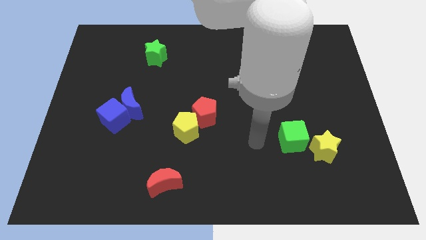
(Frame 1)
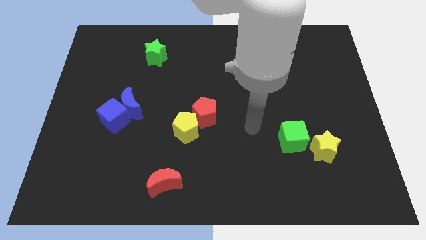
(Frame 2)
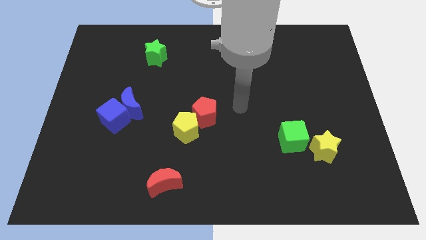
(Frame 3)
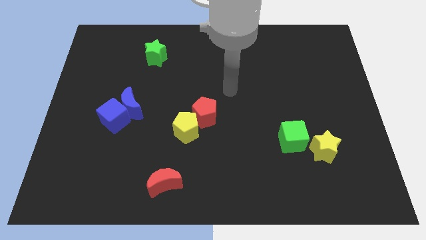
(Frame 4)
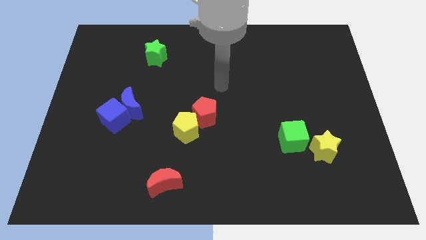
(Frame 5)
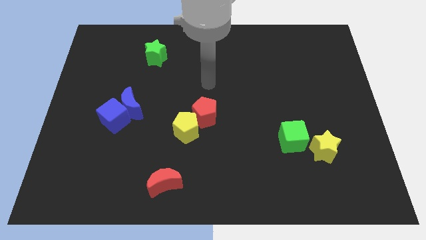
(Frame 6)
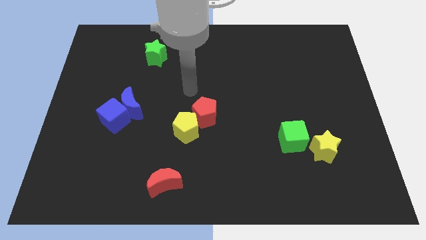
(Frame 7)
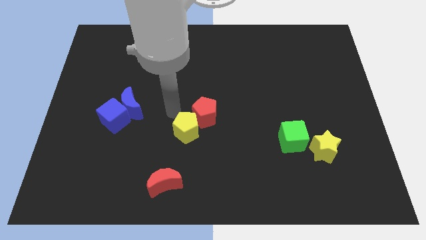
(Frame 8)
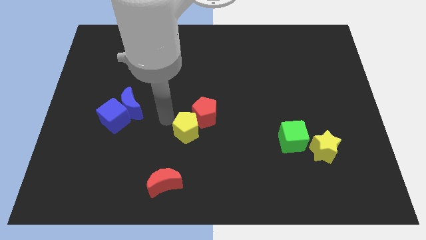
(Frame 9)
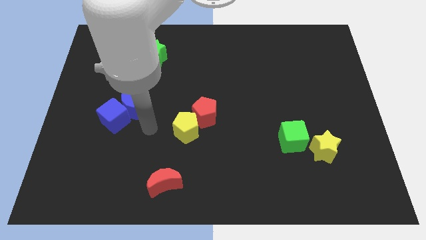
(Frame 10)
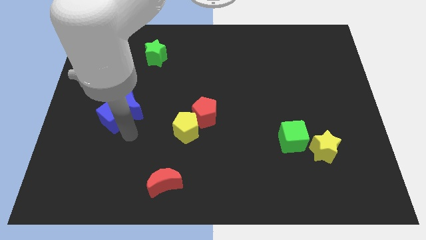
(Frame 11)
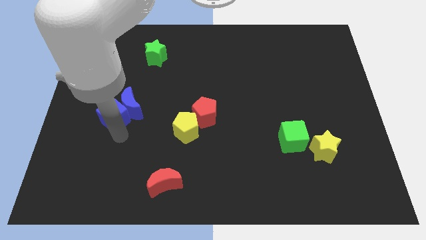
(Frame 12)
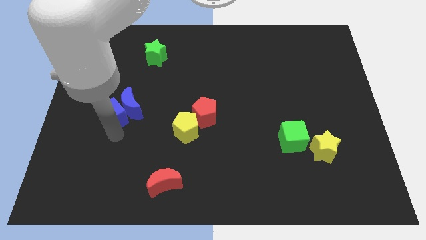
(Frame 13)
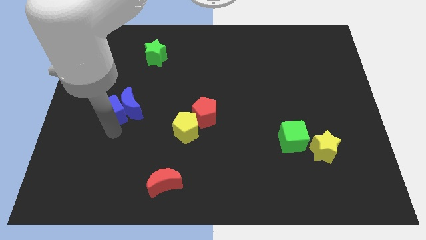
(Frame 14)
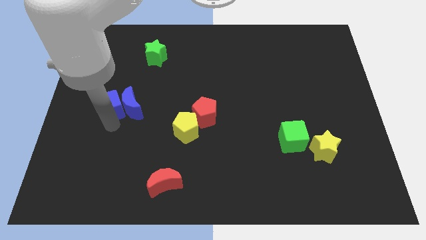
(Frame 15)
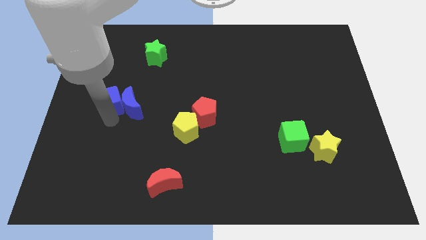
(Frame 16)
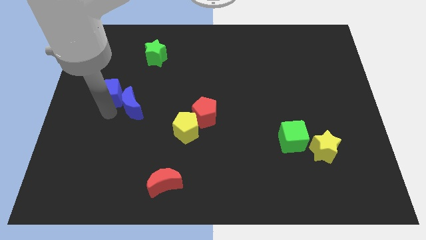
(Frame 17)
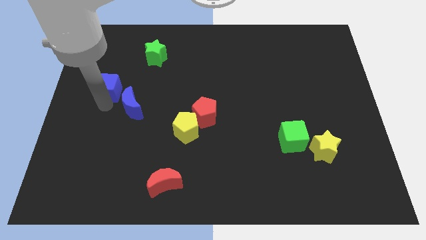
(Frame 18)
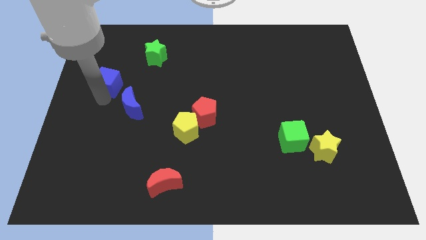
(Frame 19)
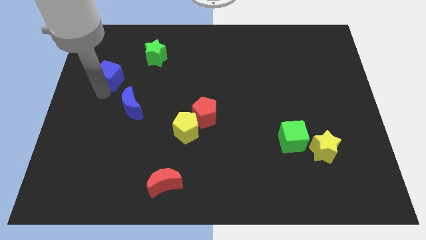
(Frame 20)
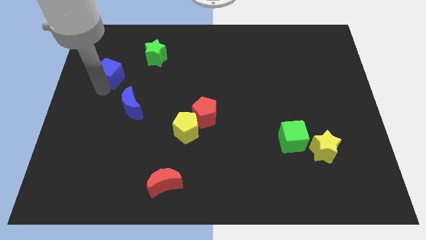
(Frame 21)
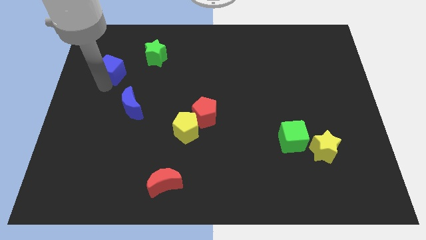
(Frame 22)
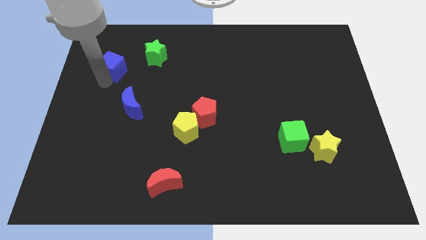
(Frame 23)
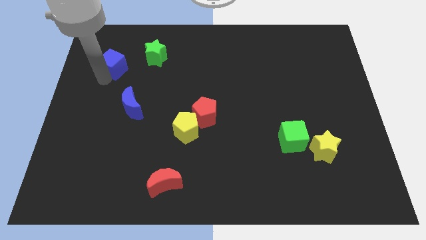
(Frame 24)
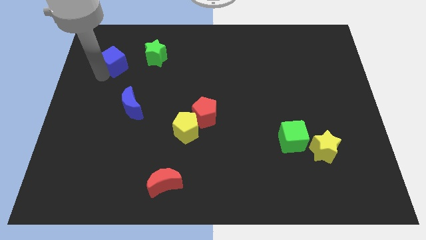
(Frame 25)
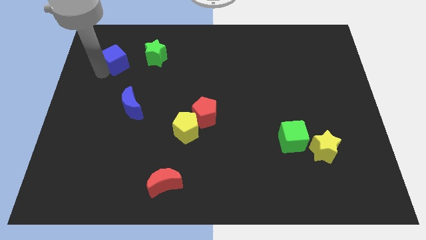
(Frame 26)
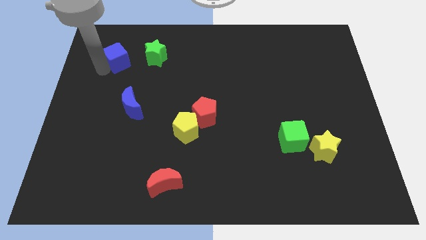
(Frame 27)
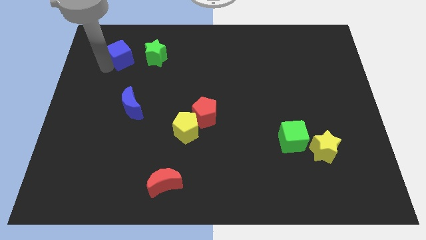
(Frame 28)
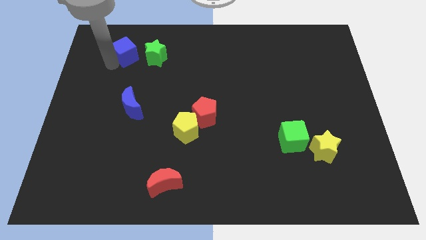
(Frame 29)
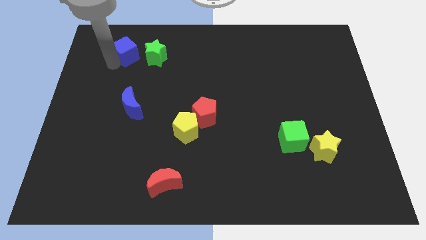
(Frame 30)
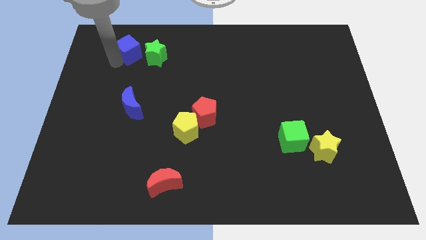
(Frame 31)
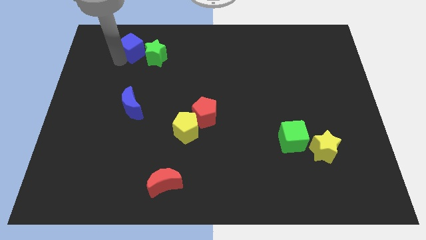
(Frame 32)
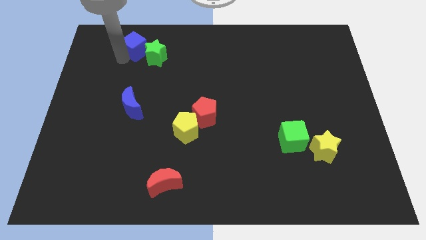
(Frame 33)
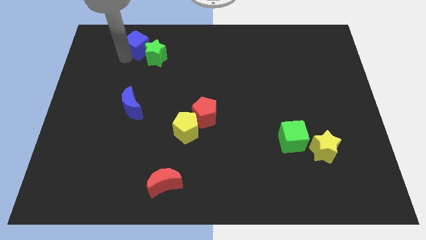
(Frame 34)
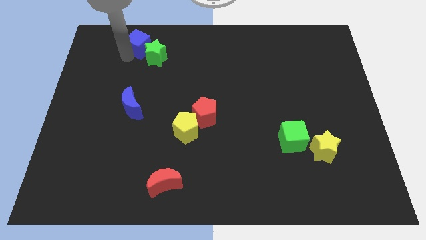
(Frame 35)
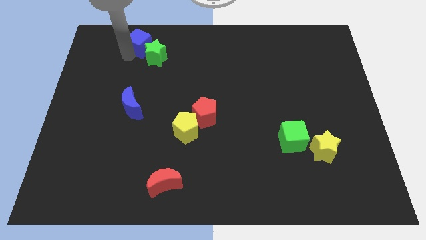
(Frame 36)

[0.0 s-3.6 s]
slide the blue cube to the green star

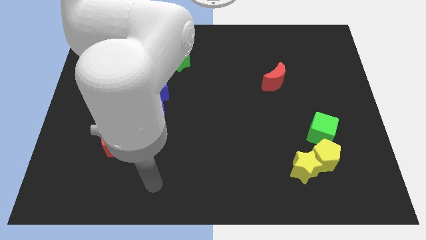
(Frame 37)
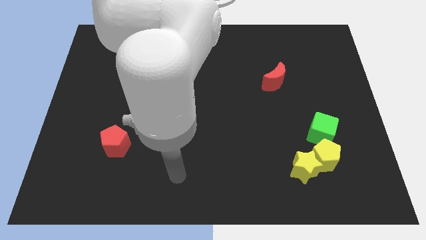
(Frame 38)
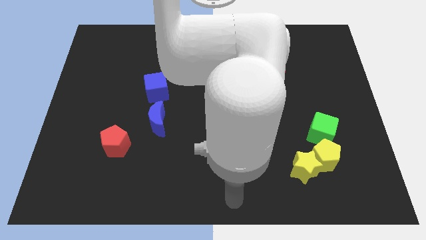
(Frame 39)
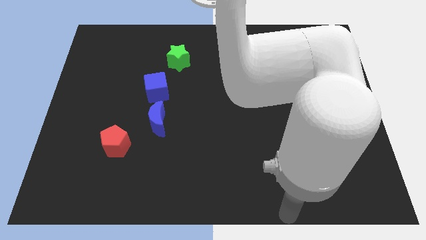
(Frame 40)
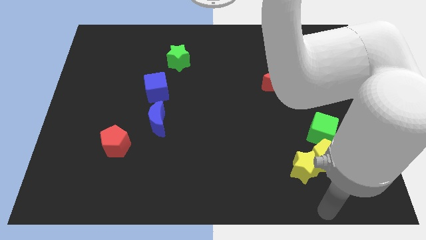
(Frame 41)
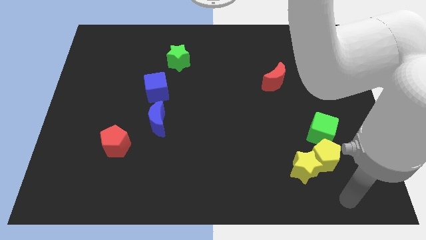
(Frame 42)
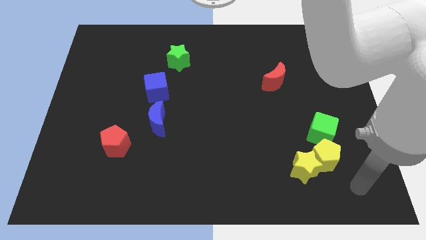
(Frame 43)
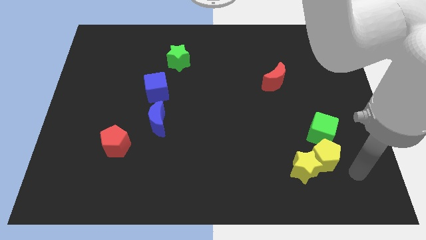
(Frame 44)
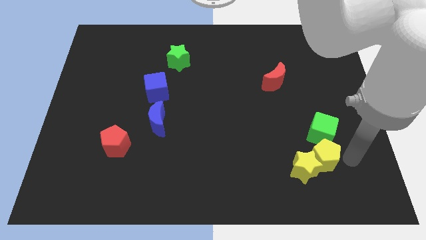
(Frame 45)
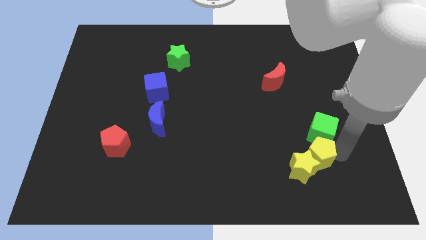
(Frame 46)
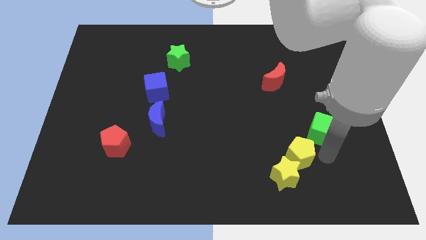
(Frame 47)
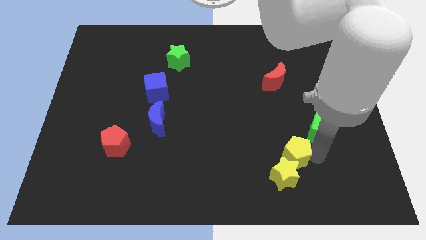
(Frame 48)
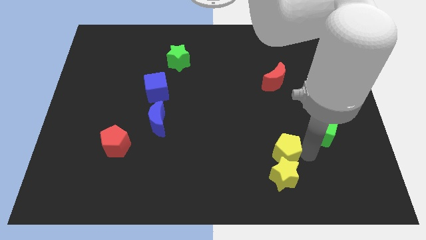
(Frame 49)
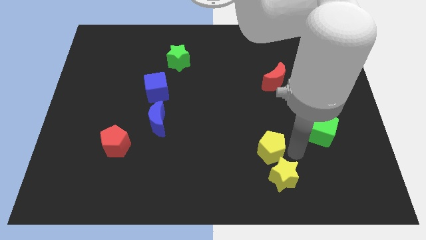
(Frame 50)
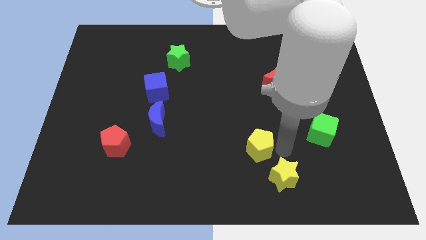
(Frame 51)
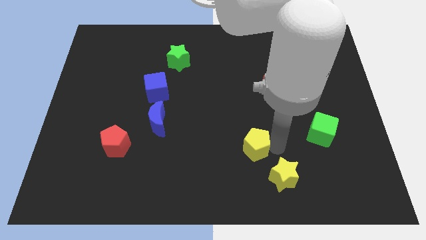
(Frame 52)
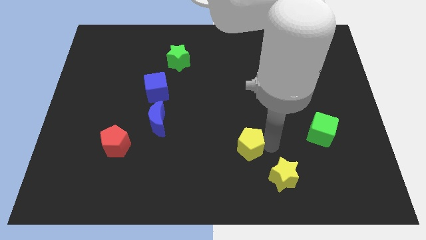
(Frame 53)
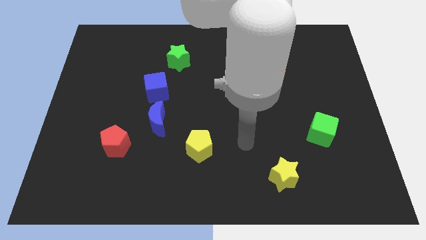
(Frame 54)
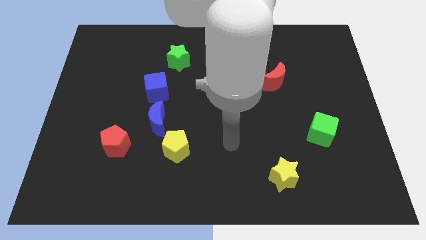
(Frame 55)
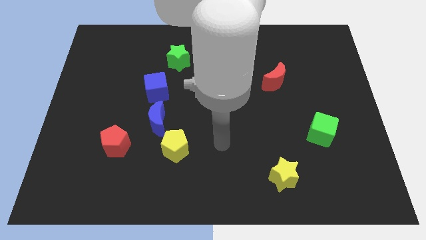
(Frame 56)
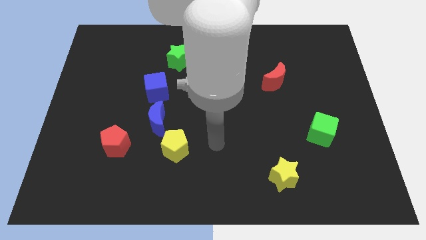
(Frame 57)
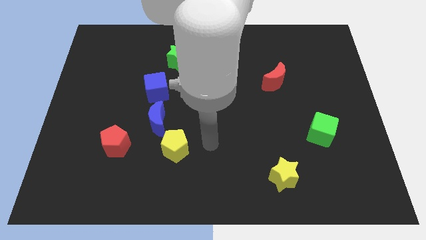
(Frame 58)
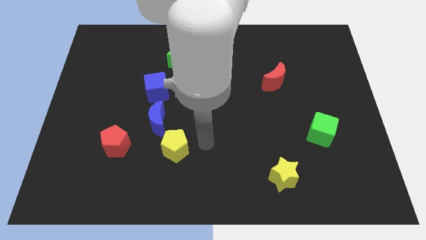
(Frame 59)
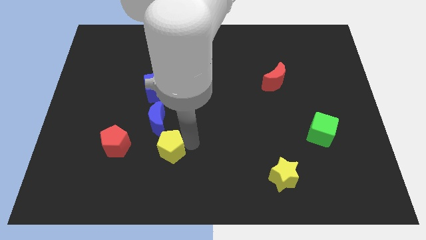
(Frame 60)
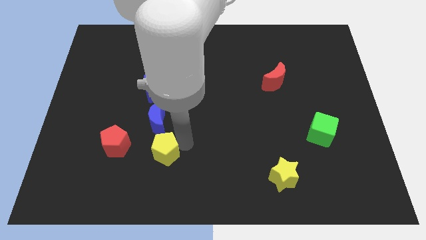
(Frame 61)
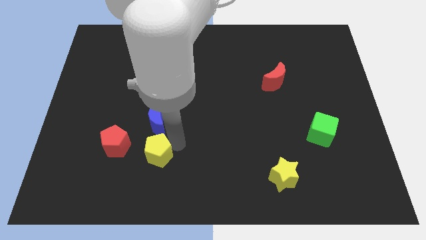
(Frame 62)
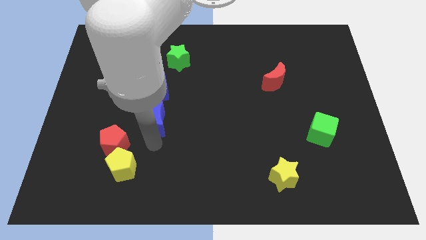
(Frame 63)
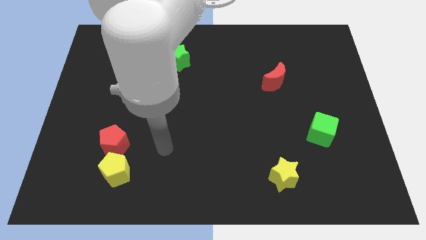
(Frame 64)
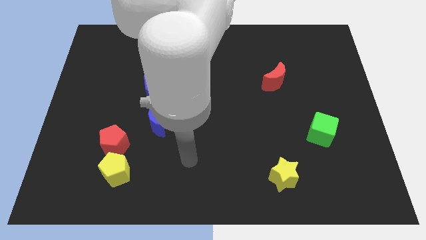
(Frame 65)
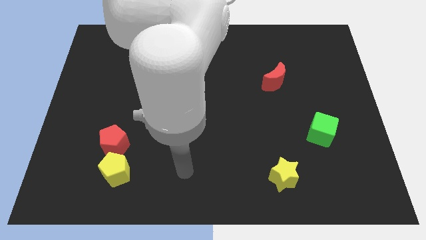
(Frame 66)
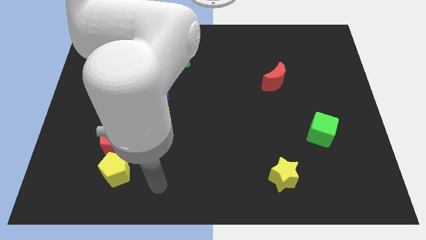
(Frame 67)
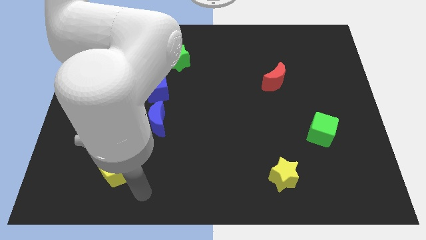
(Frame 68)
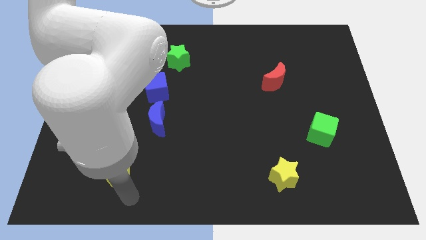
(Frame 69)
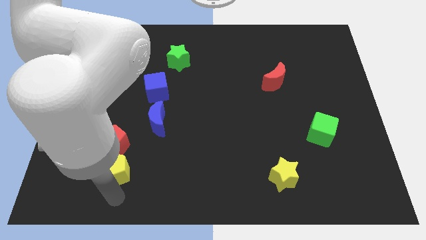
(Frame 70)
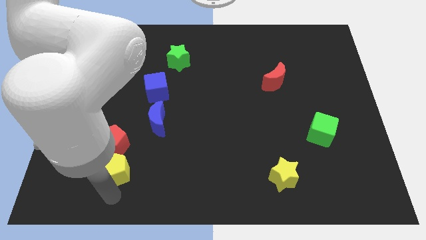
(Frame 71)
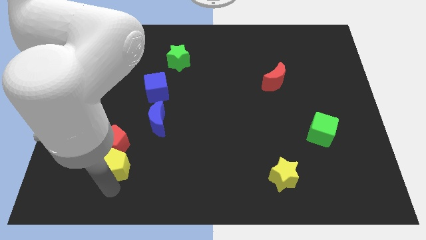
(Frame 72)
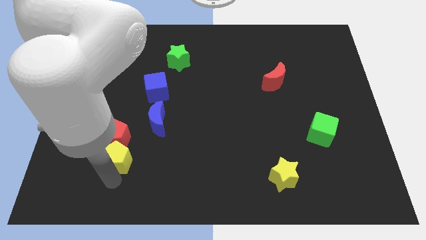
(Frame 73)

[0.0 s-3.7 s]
put the yellow pentagon close to the red pentagon

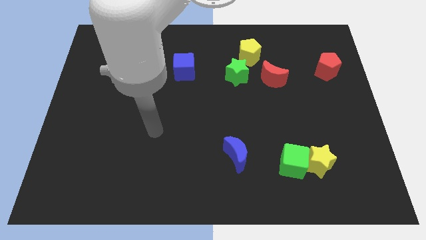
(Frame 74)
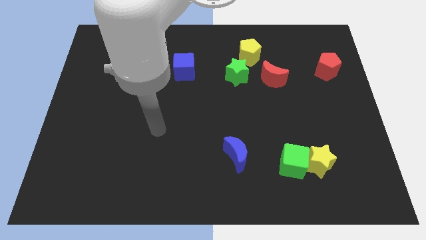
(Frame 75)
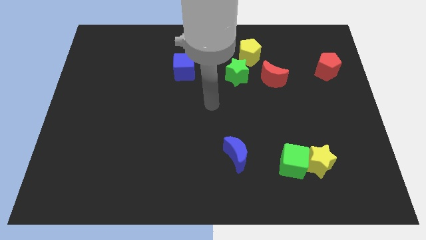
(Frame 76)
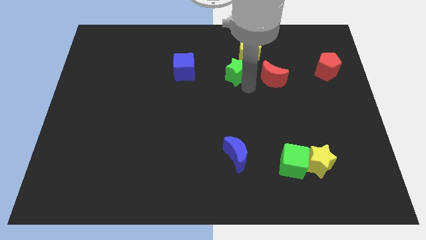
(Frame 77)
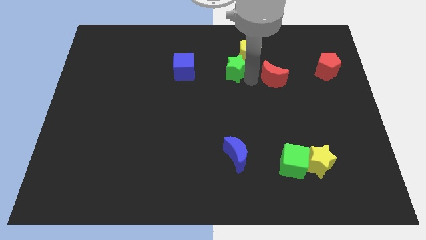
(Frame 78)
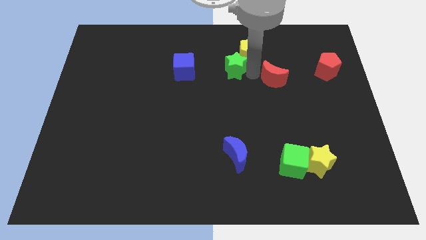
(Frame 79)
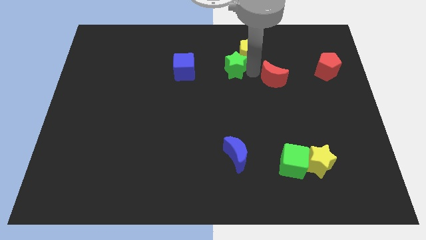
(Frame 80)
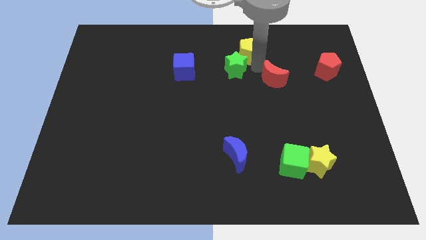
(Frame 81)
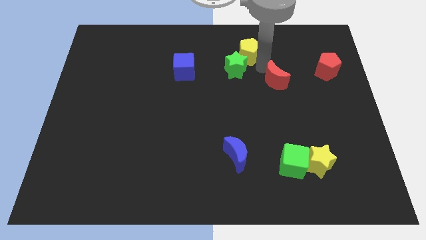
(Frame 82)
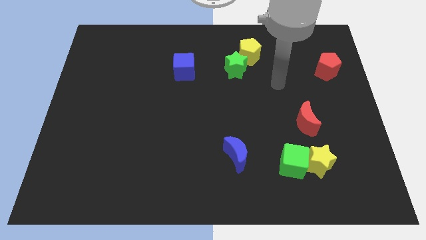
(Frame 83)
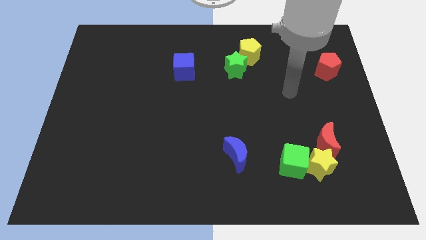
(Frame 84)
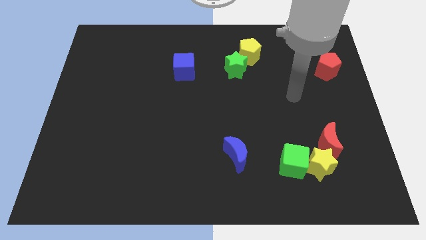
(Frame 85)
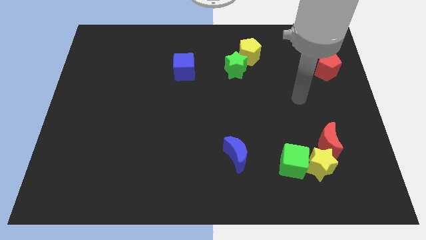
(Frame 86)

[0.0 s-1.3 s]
move the red moon towards the yellow star
